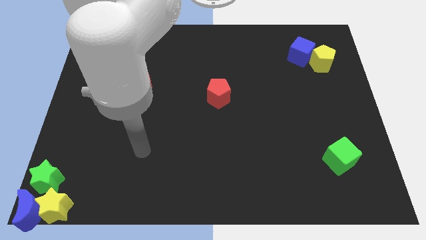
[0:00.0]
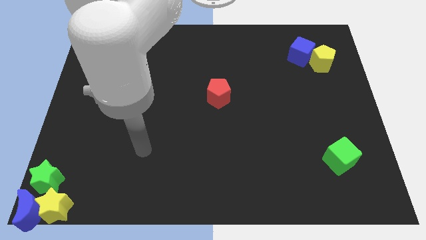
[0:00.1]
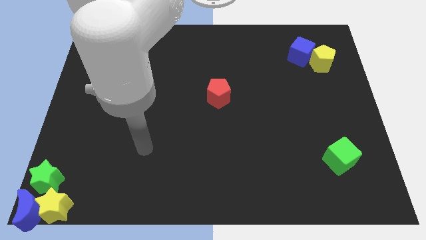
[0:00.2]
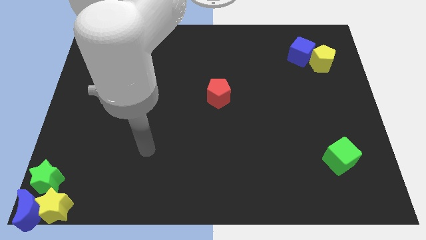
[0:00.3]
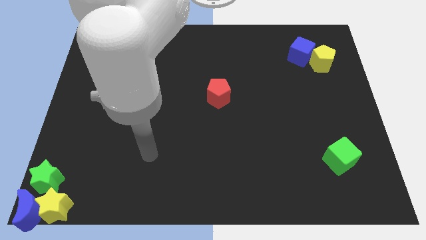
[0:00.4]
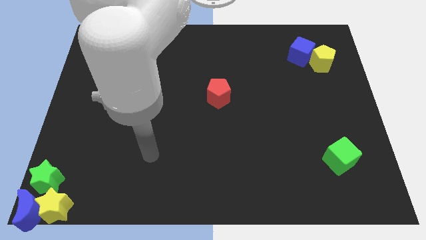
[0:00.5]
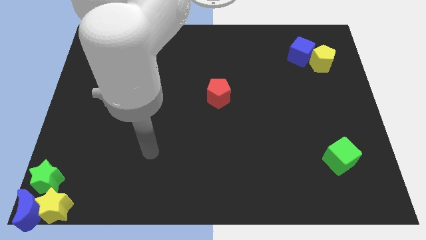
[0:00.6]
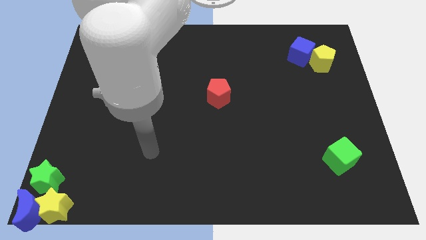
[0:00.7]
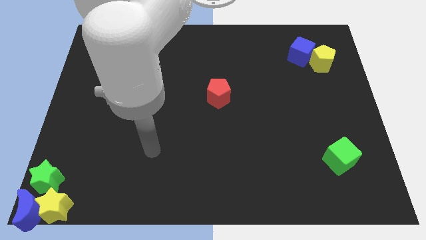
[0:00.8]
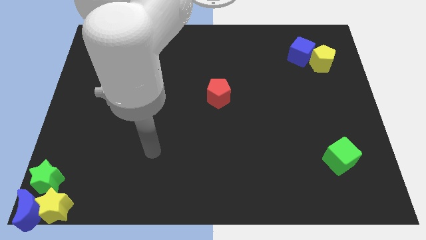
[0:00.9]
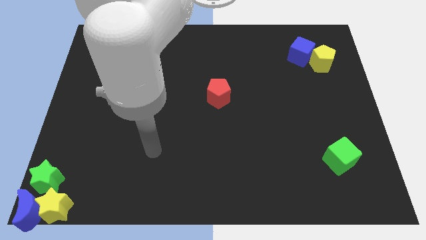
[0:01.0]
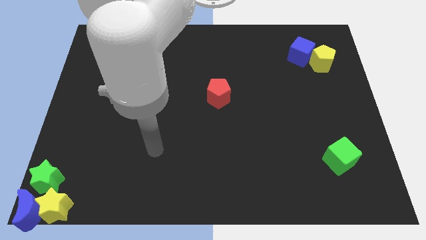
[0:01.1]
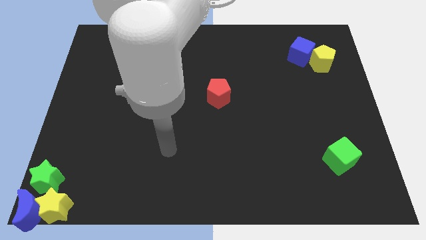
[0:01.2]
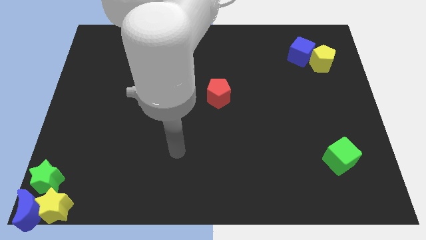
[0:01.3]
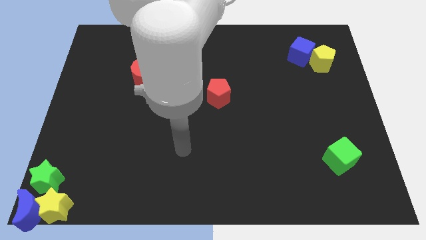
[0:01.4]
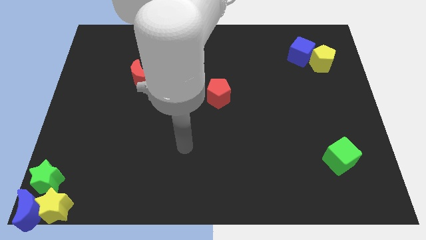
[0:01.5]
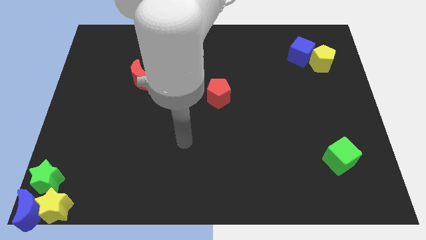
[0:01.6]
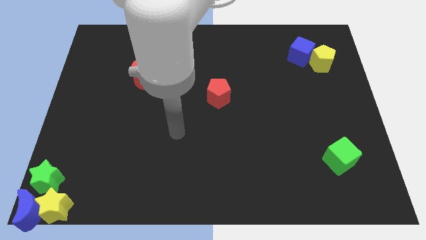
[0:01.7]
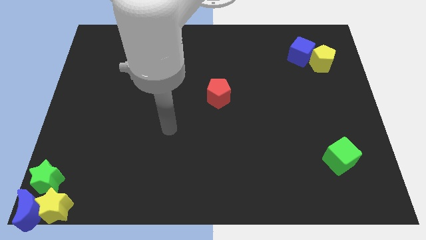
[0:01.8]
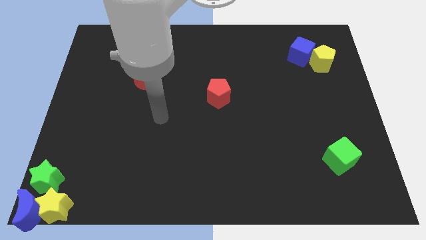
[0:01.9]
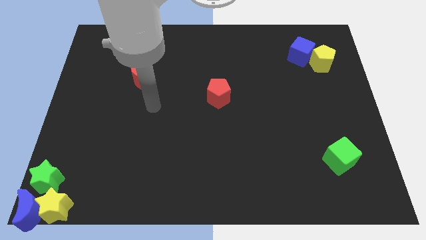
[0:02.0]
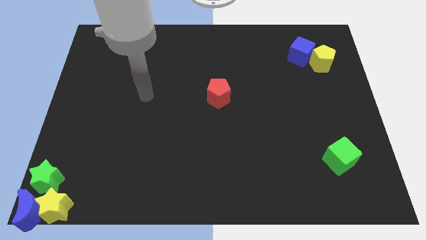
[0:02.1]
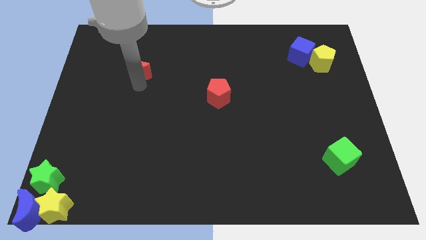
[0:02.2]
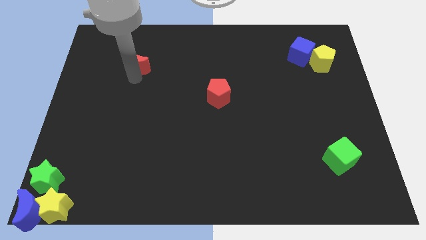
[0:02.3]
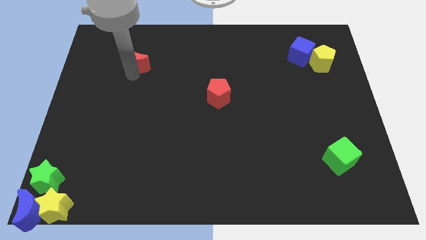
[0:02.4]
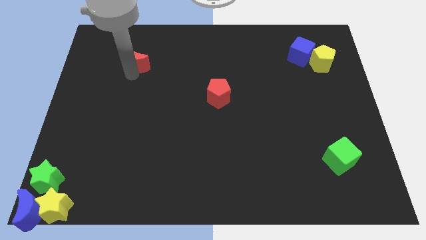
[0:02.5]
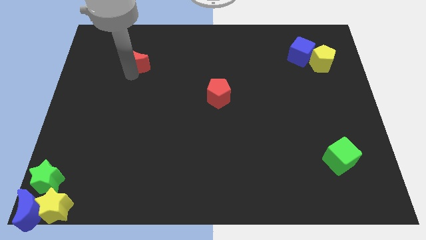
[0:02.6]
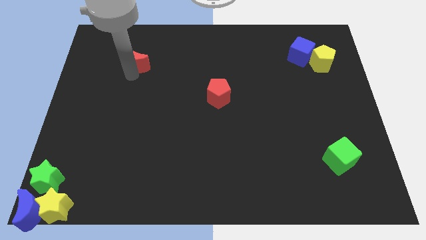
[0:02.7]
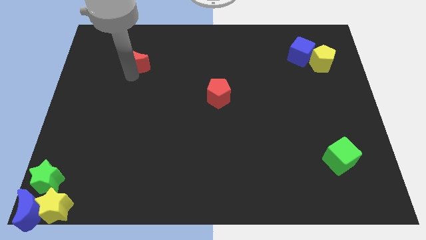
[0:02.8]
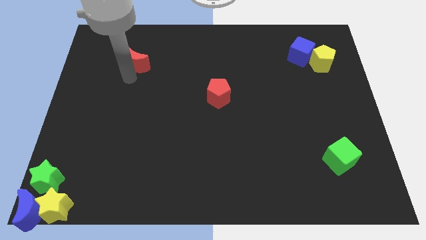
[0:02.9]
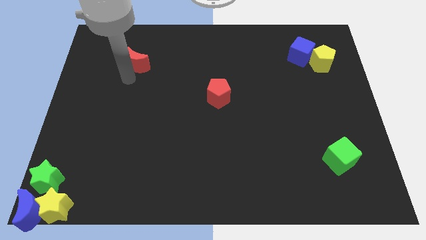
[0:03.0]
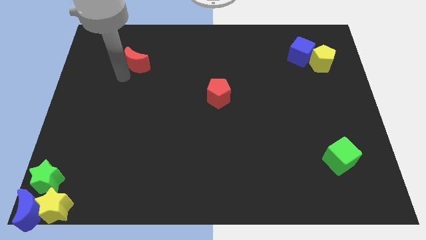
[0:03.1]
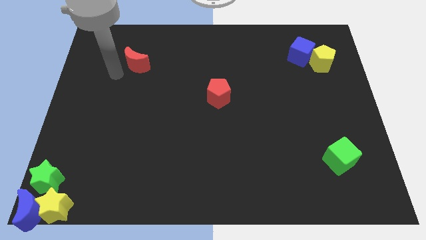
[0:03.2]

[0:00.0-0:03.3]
move the red crescent diagonal to the red pentagon

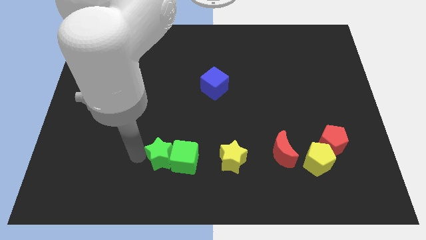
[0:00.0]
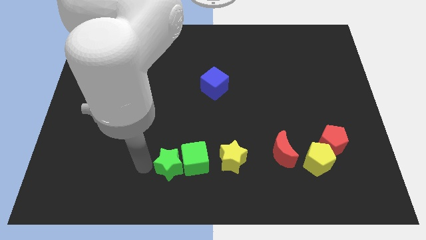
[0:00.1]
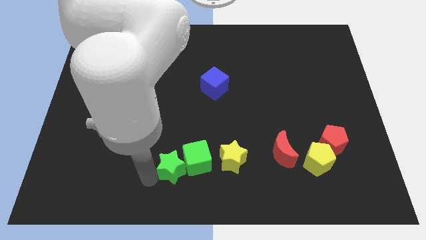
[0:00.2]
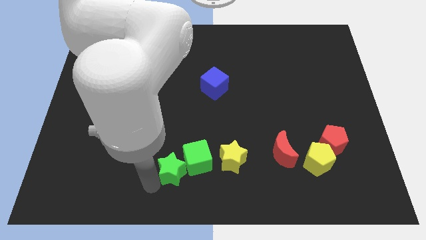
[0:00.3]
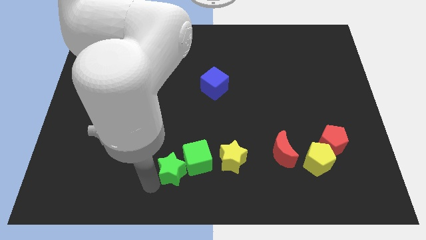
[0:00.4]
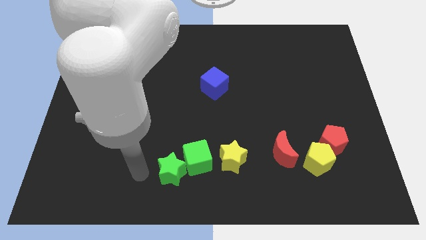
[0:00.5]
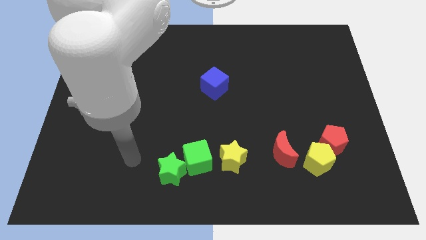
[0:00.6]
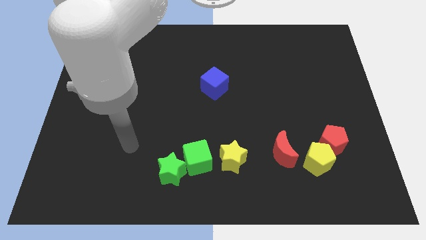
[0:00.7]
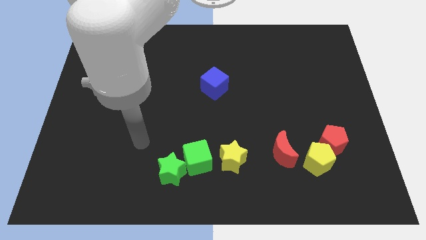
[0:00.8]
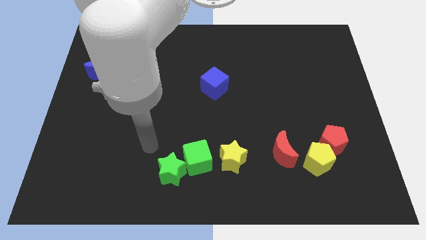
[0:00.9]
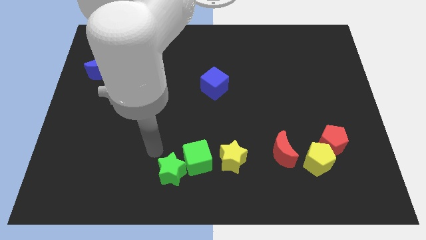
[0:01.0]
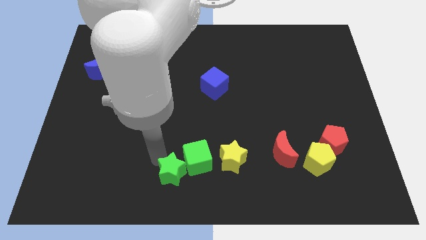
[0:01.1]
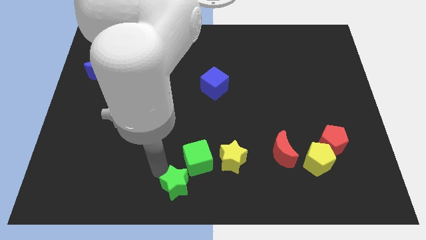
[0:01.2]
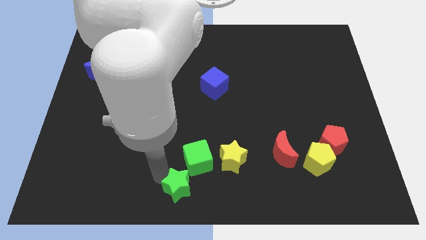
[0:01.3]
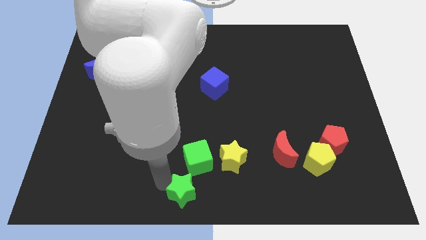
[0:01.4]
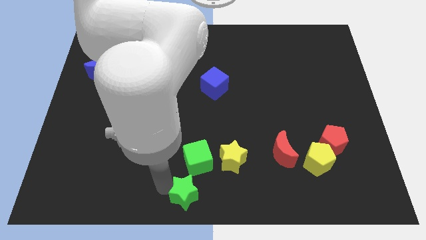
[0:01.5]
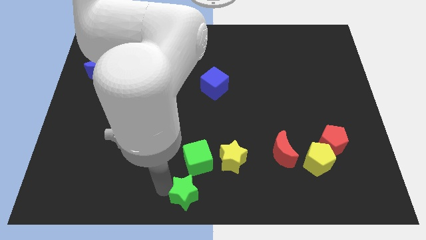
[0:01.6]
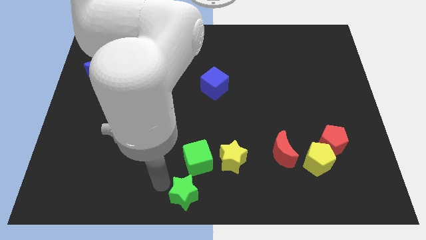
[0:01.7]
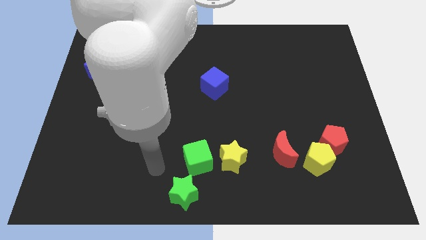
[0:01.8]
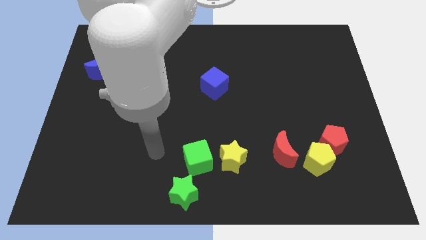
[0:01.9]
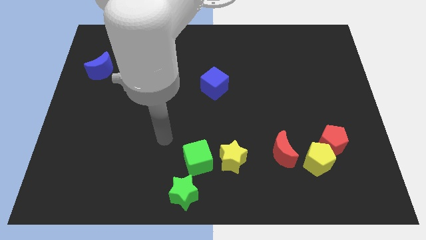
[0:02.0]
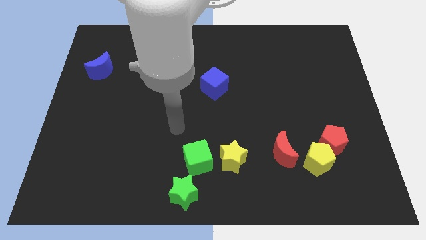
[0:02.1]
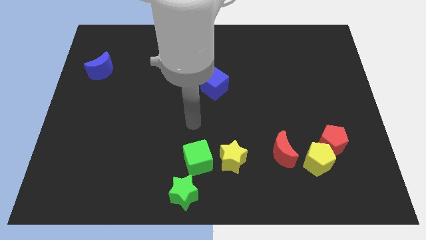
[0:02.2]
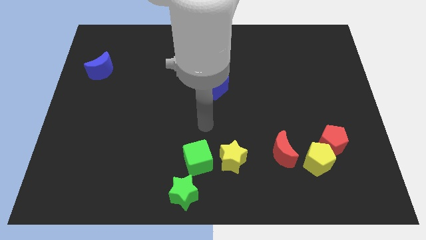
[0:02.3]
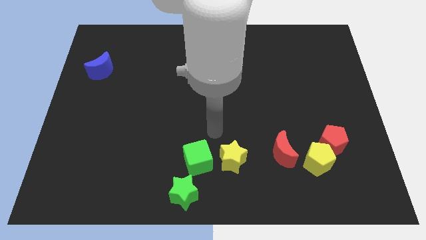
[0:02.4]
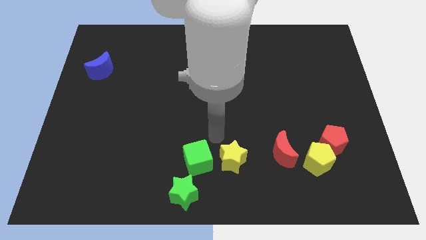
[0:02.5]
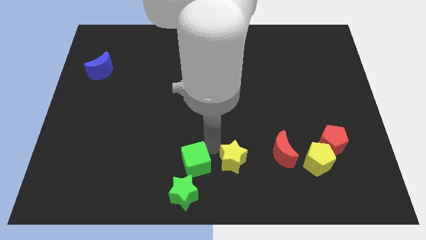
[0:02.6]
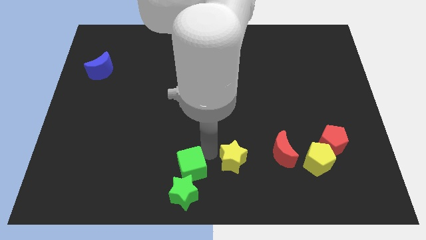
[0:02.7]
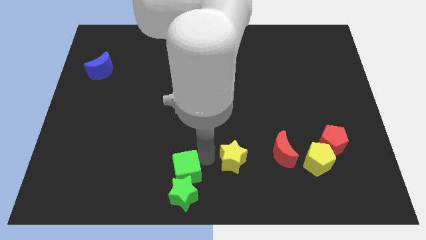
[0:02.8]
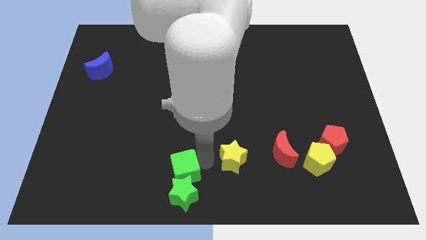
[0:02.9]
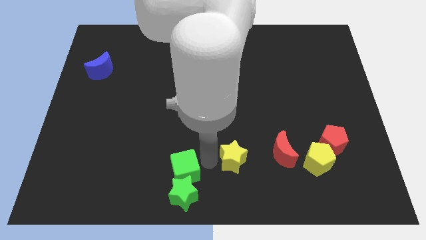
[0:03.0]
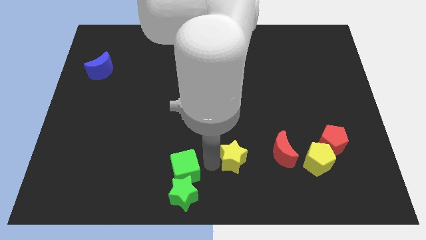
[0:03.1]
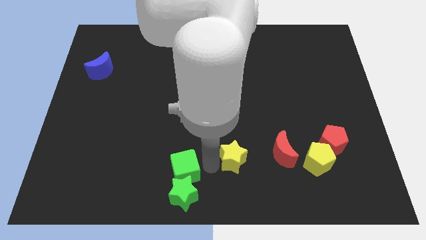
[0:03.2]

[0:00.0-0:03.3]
push the green star below the green cube vertically

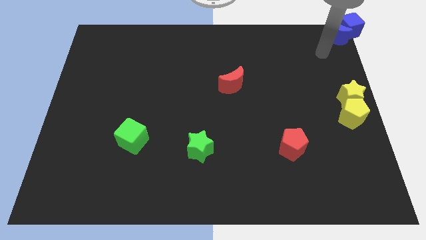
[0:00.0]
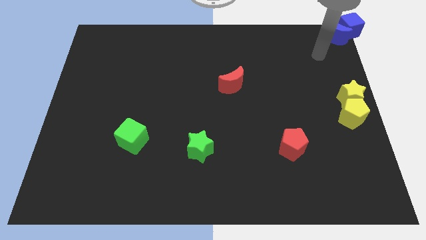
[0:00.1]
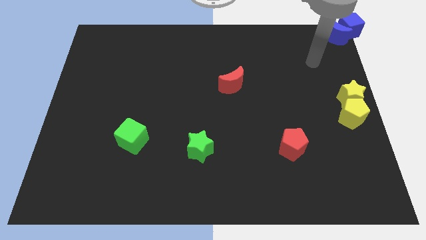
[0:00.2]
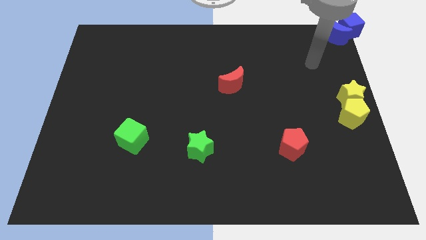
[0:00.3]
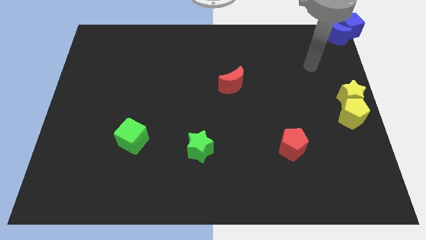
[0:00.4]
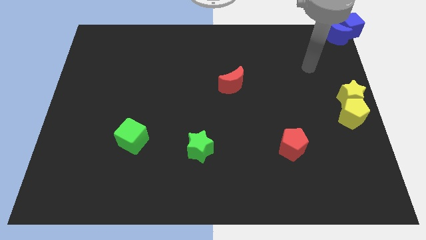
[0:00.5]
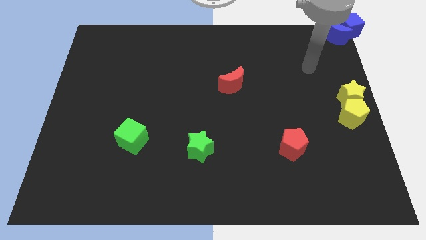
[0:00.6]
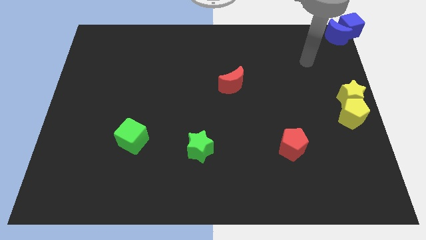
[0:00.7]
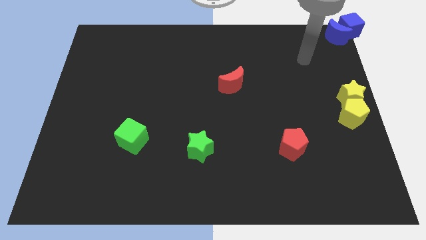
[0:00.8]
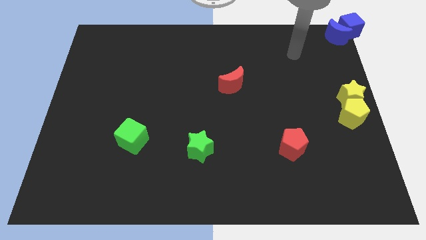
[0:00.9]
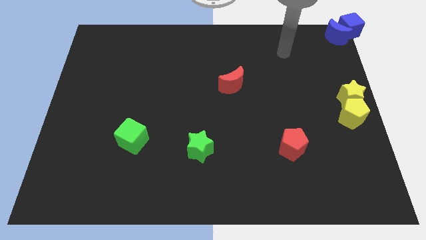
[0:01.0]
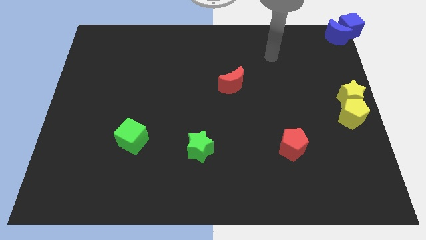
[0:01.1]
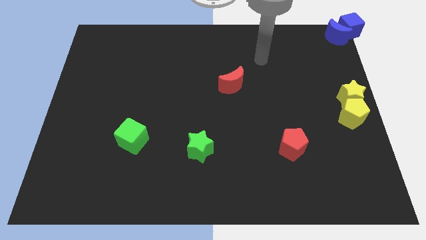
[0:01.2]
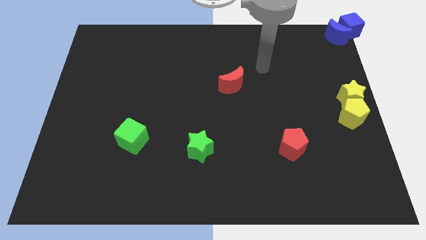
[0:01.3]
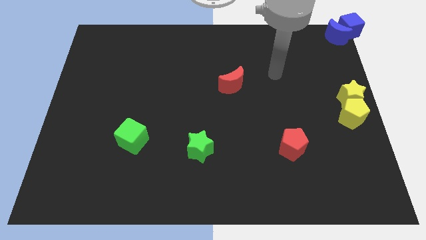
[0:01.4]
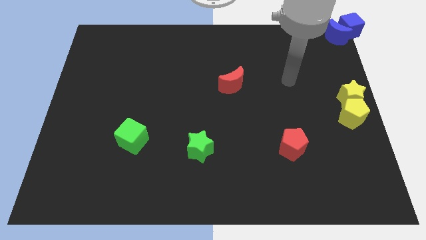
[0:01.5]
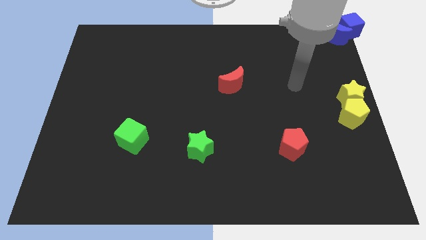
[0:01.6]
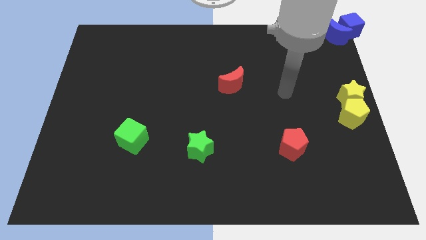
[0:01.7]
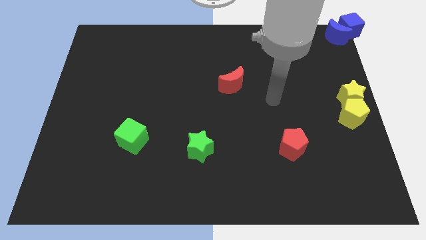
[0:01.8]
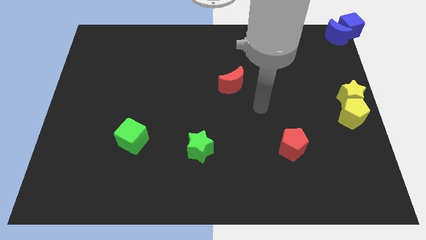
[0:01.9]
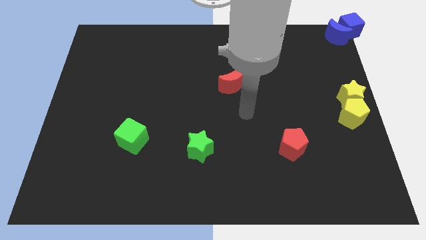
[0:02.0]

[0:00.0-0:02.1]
move your arm towards the center of the board

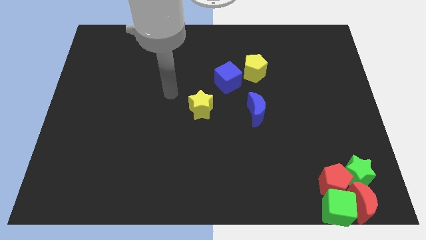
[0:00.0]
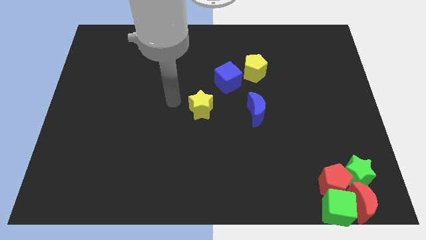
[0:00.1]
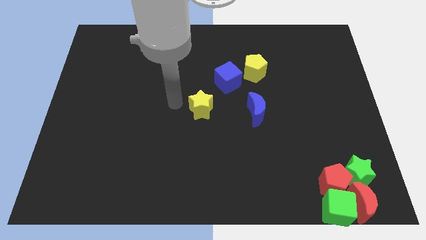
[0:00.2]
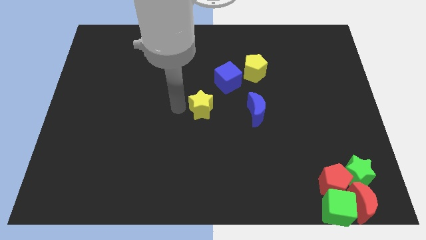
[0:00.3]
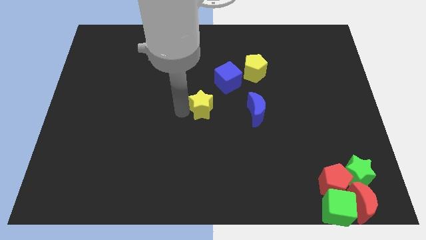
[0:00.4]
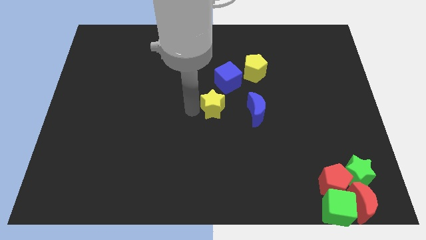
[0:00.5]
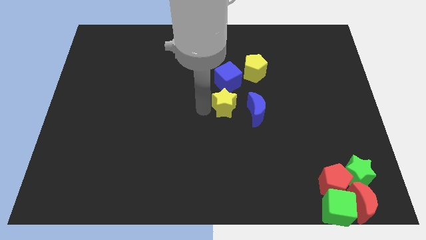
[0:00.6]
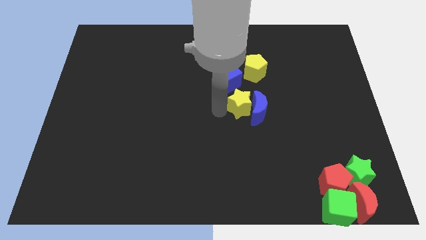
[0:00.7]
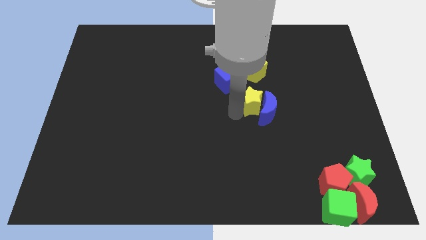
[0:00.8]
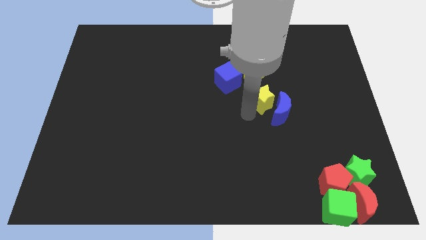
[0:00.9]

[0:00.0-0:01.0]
push the yellow star into the blue cube
